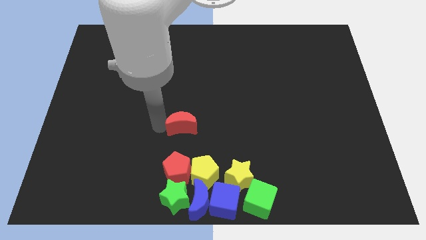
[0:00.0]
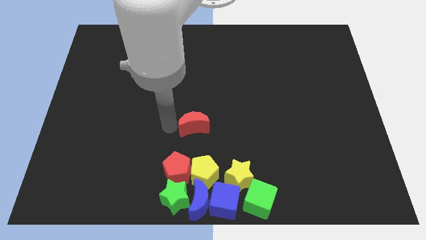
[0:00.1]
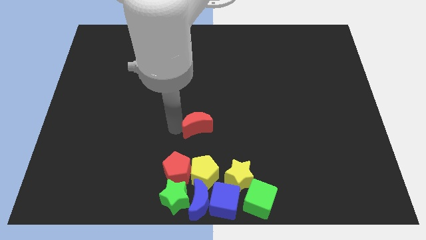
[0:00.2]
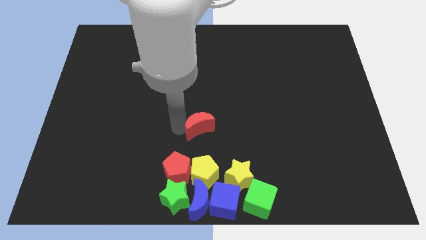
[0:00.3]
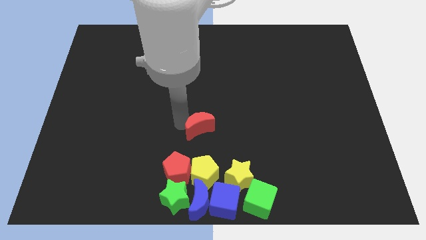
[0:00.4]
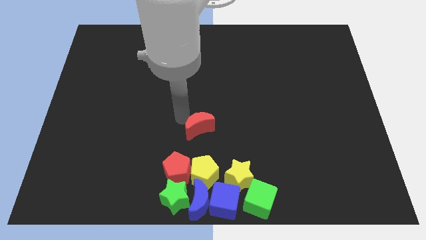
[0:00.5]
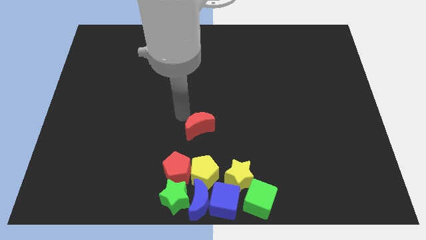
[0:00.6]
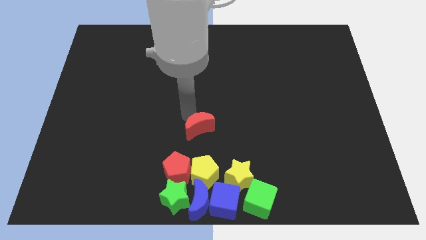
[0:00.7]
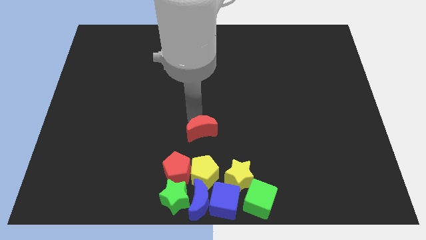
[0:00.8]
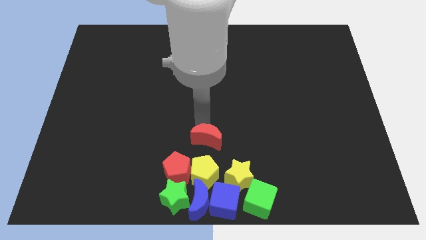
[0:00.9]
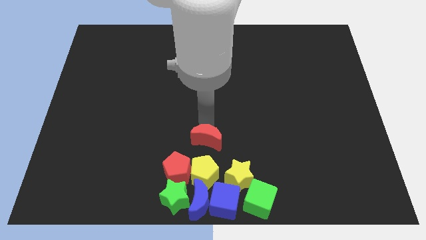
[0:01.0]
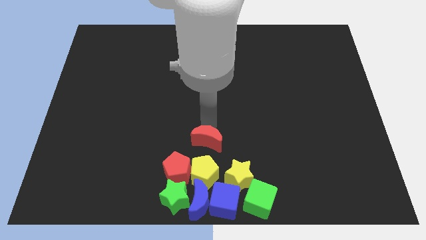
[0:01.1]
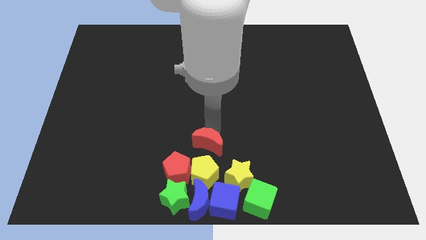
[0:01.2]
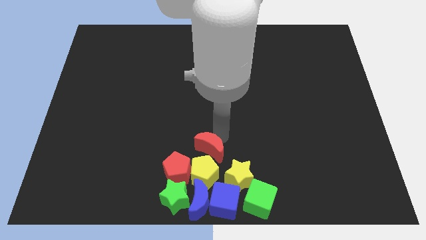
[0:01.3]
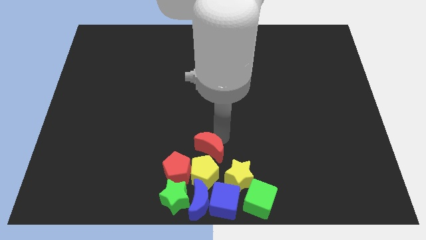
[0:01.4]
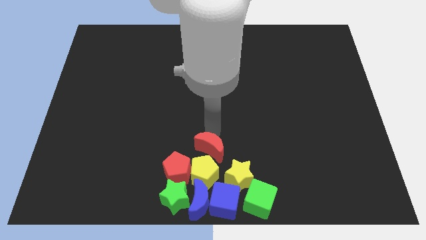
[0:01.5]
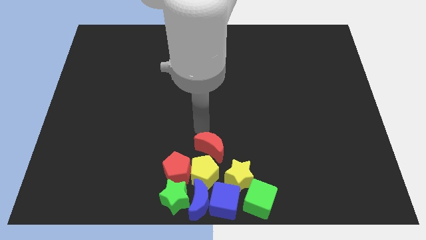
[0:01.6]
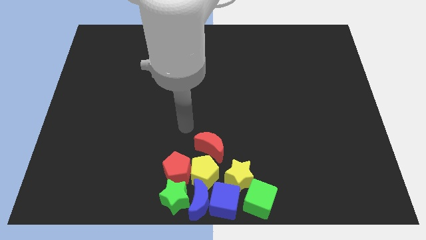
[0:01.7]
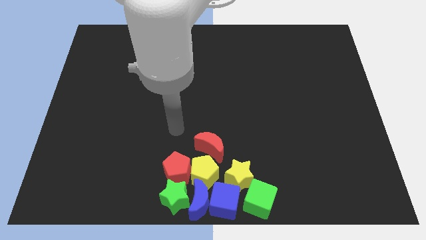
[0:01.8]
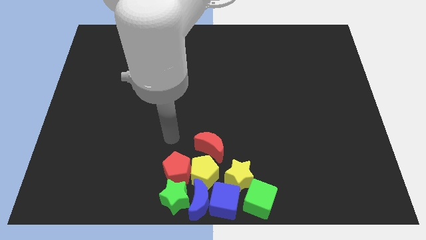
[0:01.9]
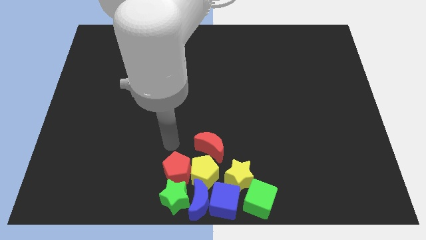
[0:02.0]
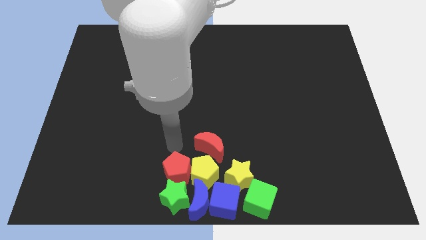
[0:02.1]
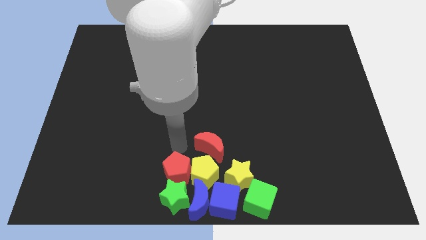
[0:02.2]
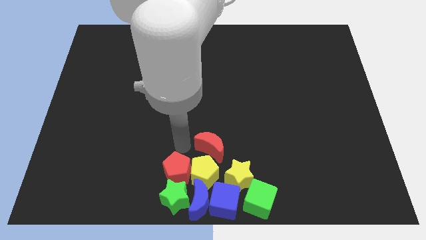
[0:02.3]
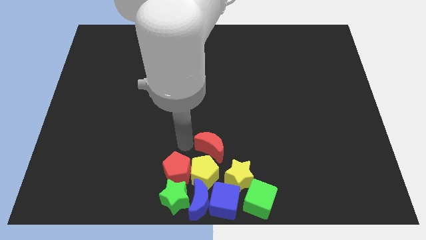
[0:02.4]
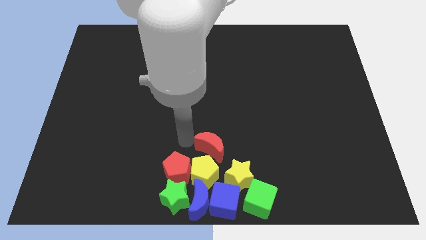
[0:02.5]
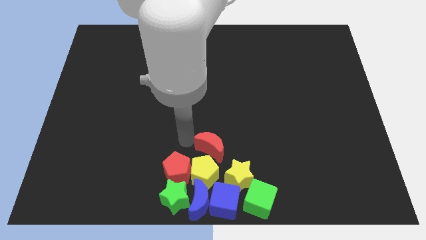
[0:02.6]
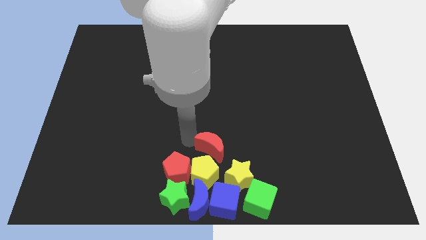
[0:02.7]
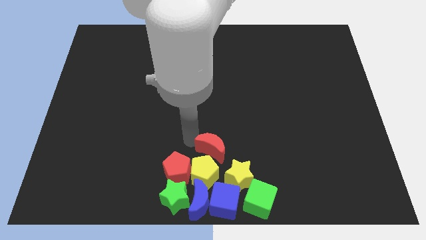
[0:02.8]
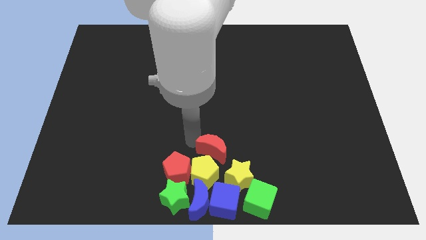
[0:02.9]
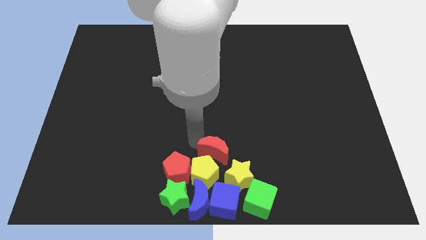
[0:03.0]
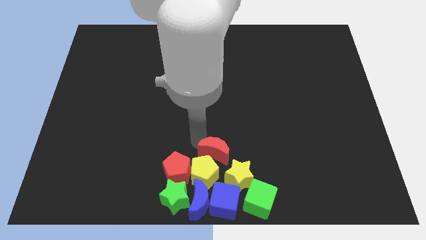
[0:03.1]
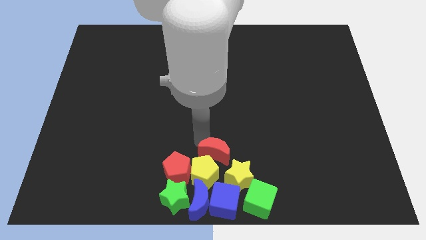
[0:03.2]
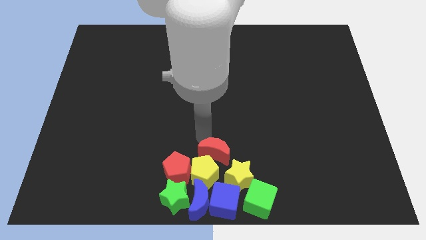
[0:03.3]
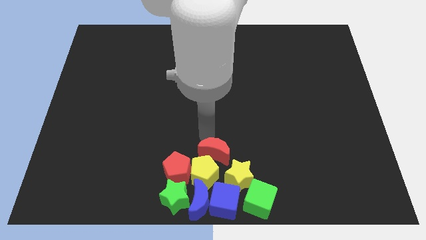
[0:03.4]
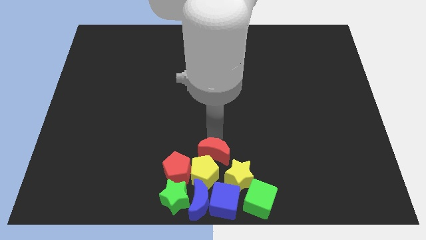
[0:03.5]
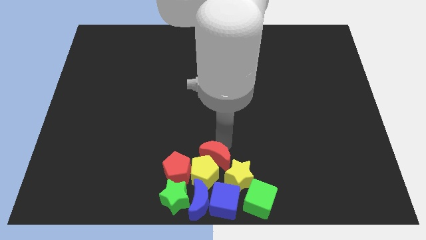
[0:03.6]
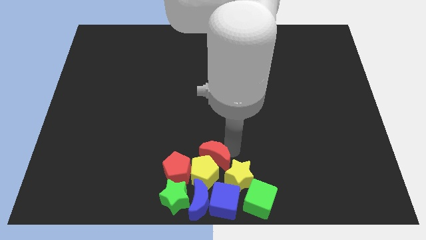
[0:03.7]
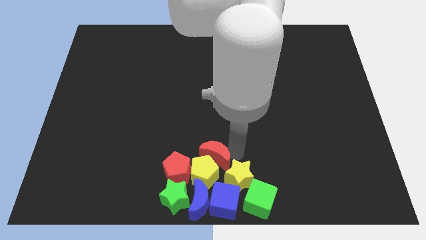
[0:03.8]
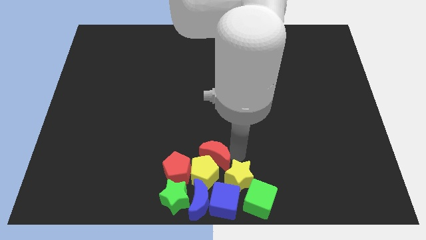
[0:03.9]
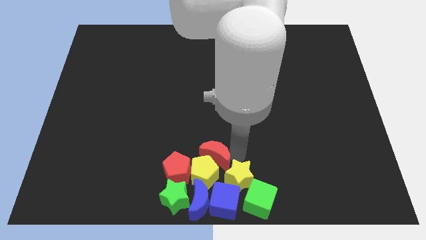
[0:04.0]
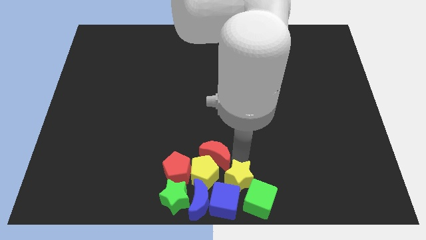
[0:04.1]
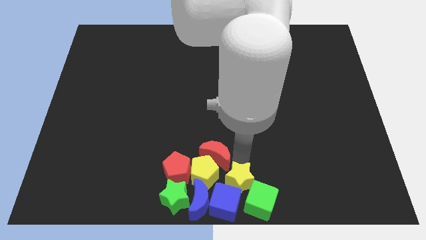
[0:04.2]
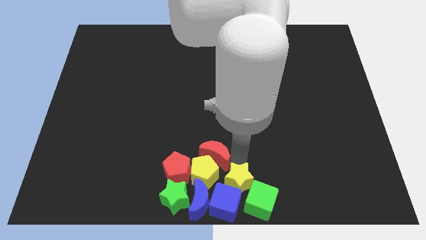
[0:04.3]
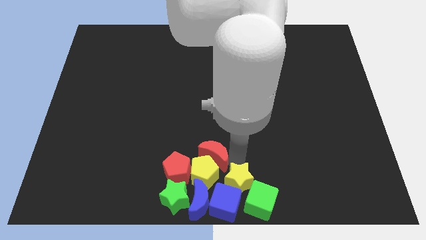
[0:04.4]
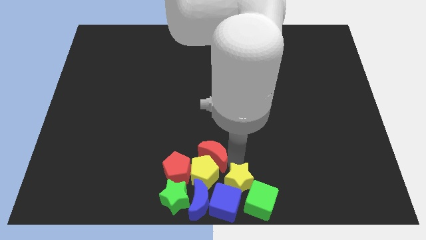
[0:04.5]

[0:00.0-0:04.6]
drag the red moon into the yellow pentagon

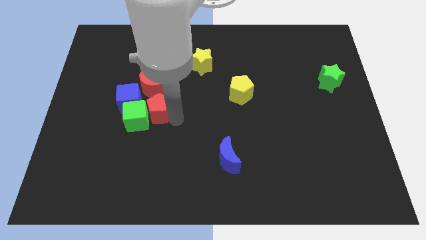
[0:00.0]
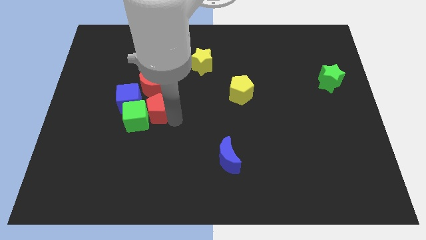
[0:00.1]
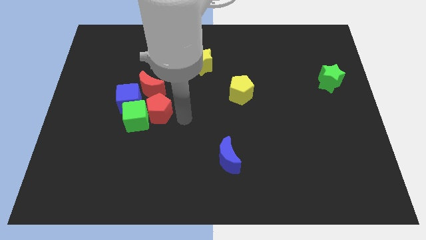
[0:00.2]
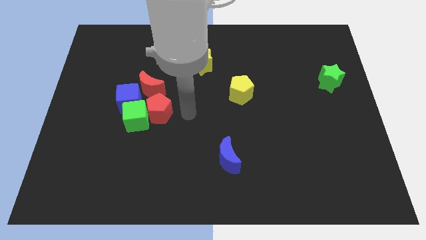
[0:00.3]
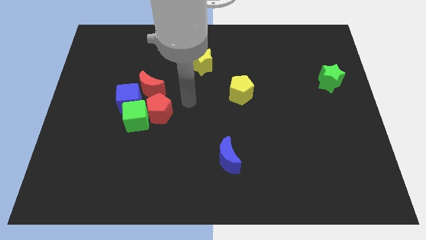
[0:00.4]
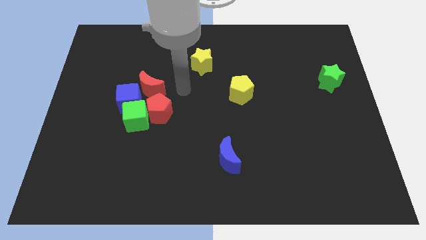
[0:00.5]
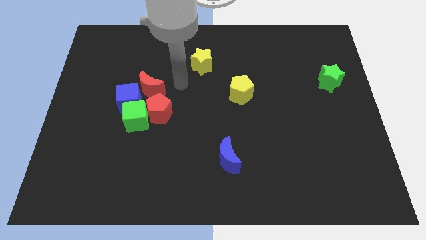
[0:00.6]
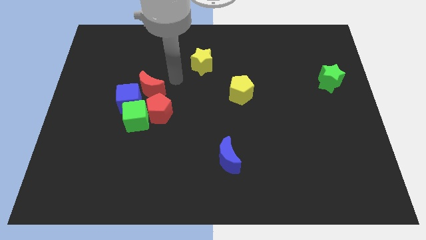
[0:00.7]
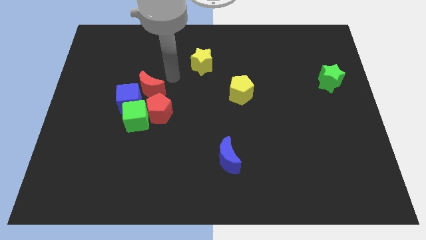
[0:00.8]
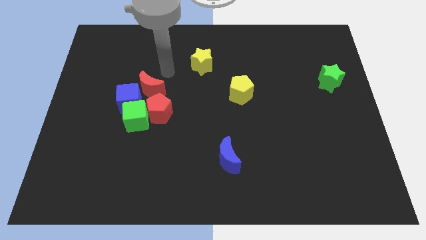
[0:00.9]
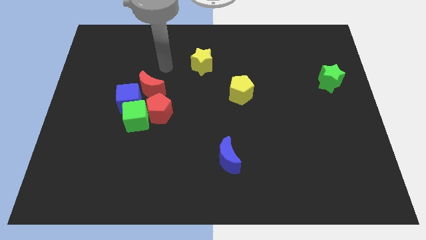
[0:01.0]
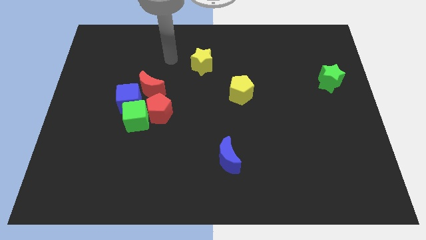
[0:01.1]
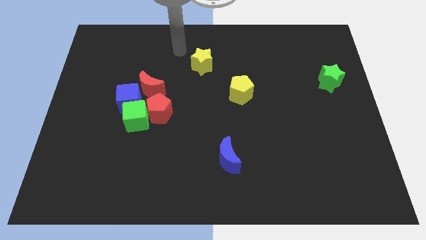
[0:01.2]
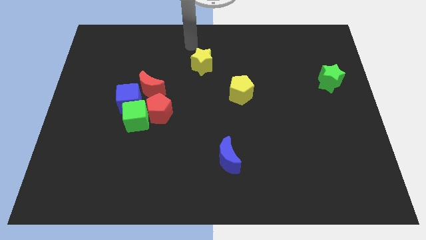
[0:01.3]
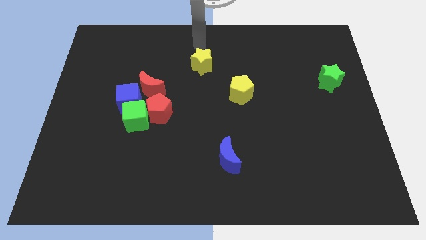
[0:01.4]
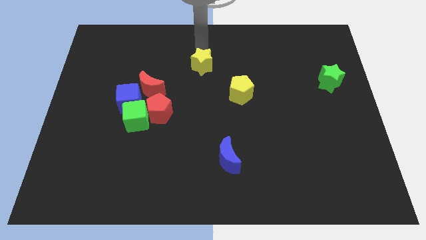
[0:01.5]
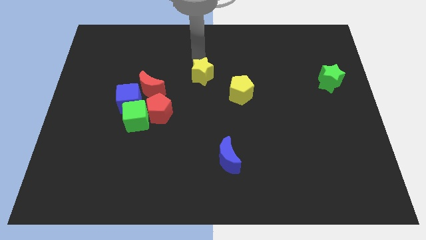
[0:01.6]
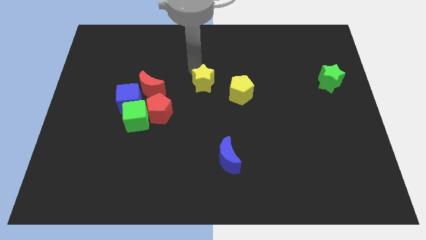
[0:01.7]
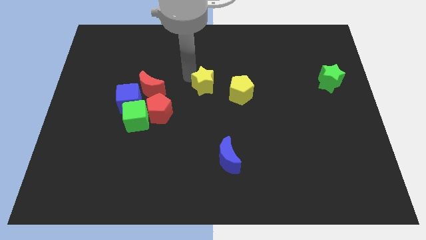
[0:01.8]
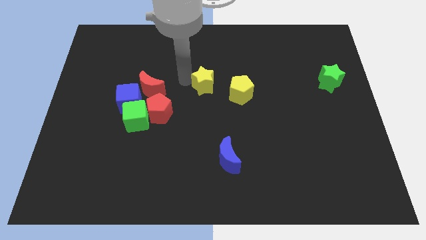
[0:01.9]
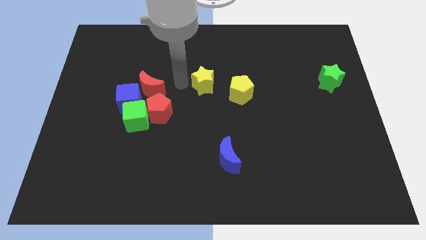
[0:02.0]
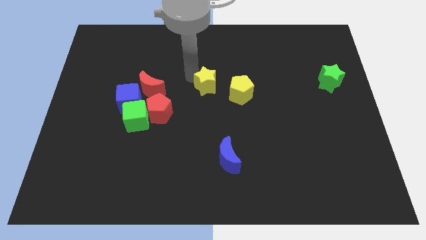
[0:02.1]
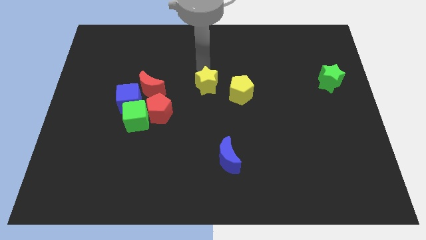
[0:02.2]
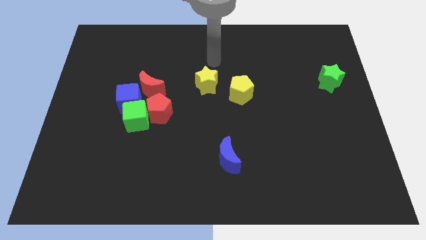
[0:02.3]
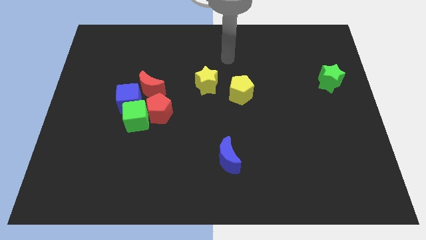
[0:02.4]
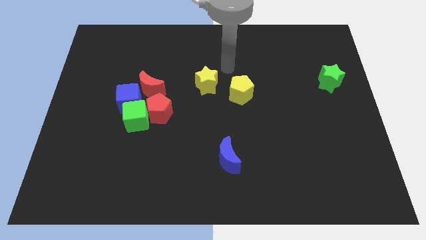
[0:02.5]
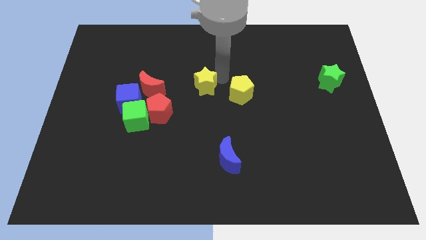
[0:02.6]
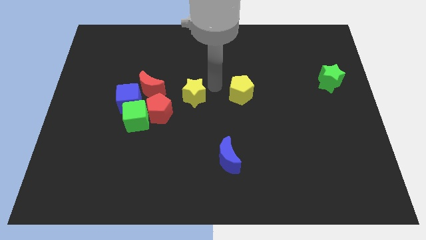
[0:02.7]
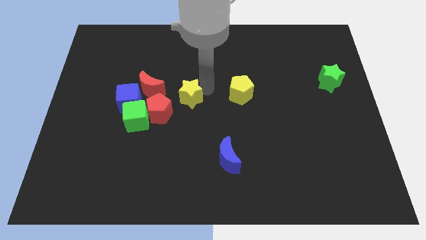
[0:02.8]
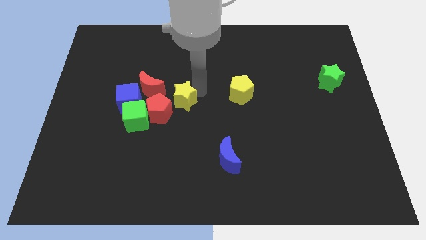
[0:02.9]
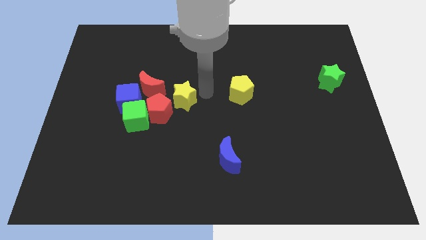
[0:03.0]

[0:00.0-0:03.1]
push the yellow star left to the yellow pentagon

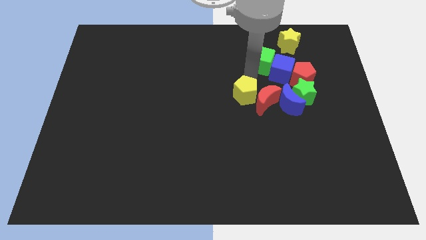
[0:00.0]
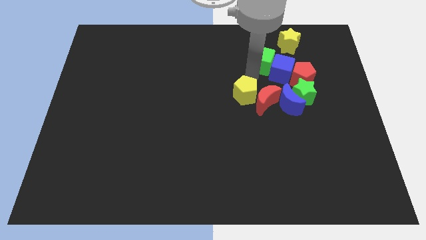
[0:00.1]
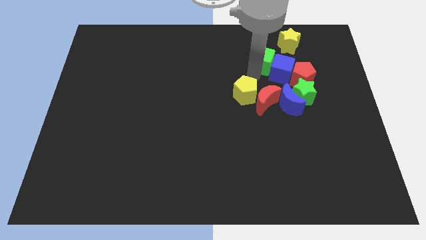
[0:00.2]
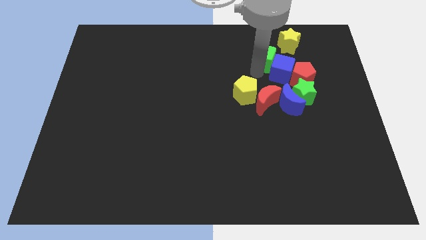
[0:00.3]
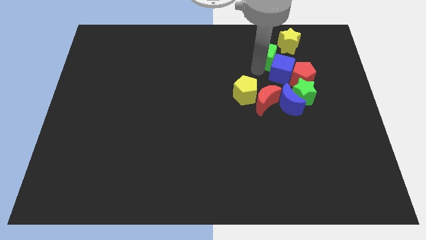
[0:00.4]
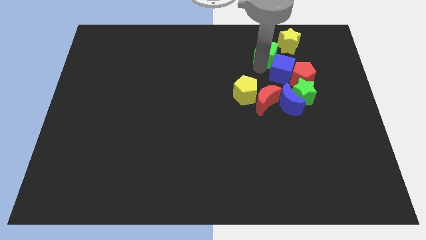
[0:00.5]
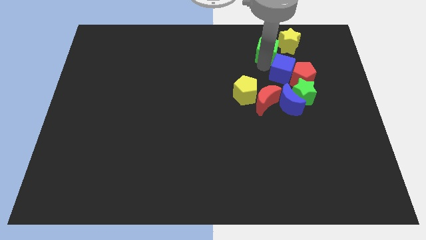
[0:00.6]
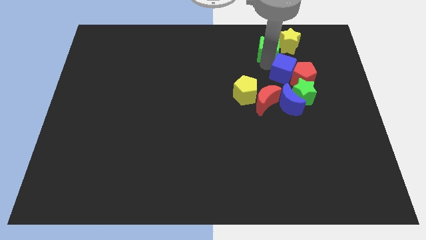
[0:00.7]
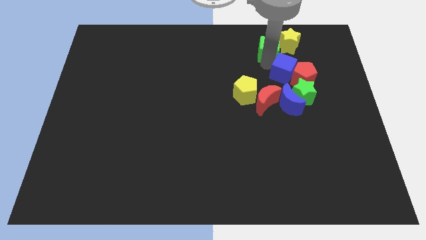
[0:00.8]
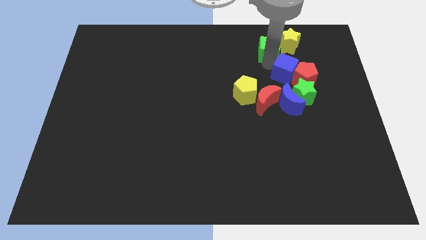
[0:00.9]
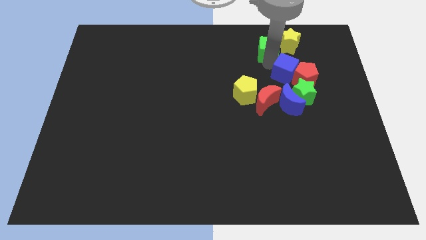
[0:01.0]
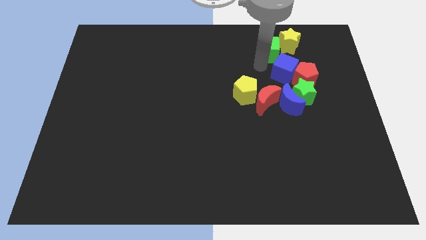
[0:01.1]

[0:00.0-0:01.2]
move the green cube slightly up
